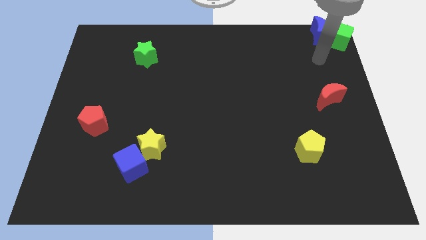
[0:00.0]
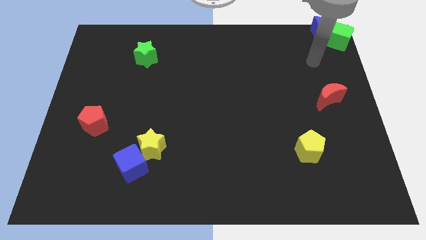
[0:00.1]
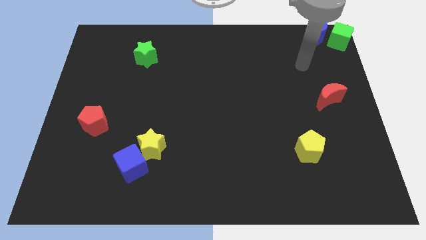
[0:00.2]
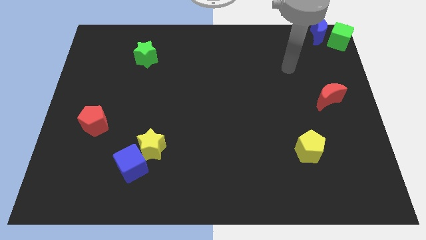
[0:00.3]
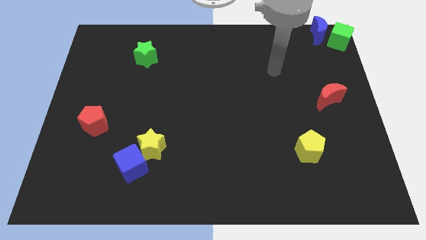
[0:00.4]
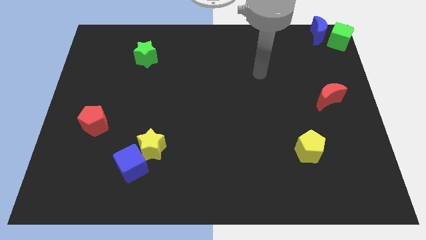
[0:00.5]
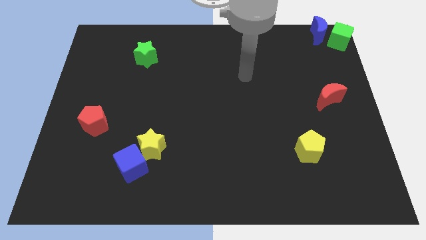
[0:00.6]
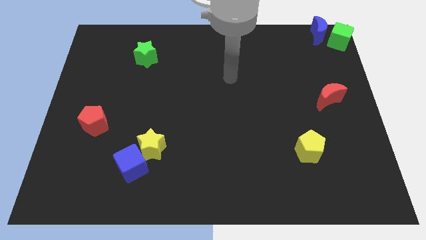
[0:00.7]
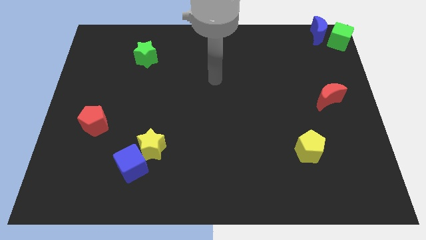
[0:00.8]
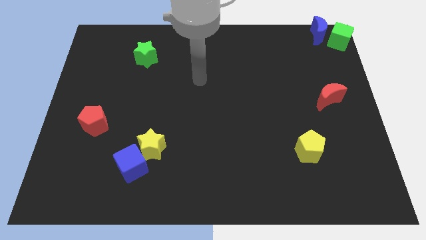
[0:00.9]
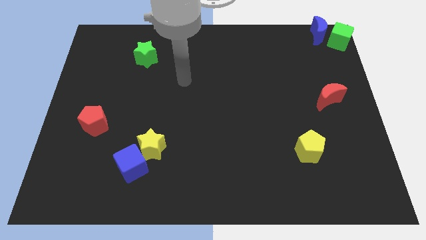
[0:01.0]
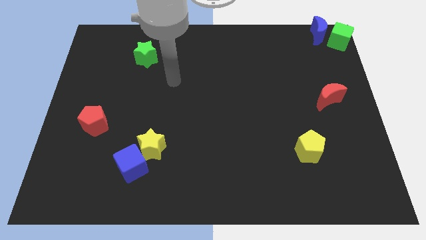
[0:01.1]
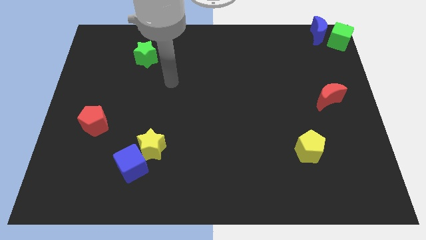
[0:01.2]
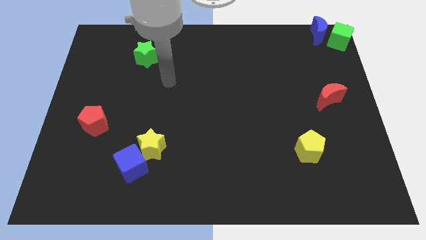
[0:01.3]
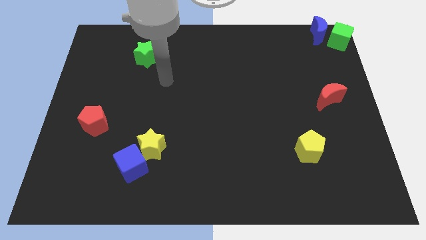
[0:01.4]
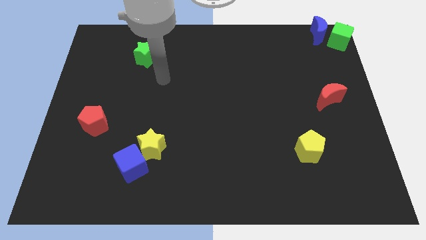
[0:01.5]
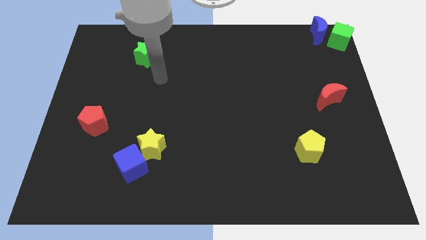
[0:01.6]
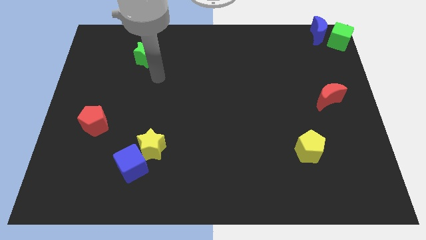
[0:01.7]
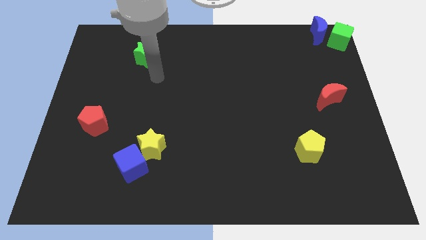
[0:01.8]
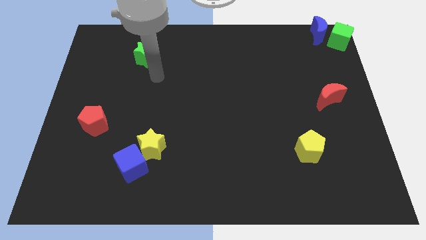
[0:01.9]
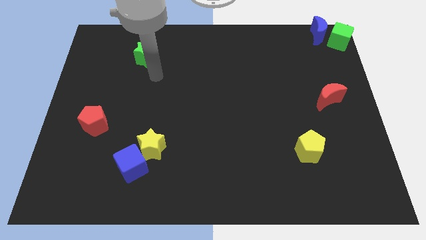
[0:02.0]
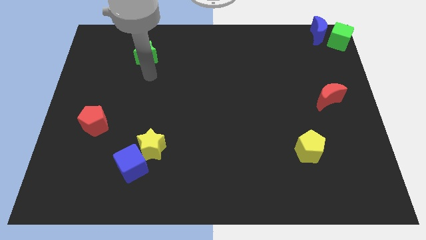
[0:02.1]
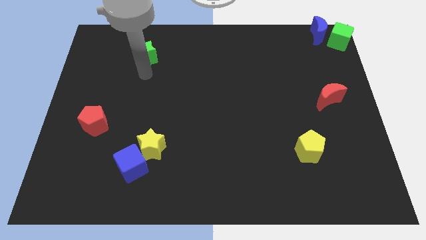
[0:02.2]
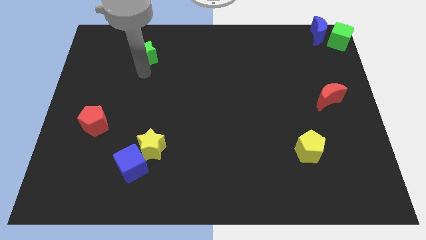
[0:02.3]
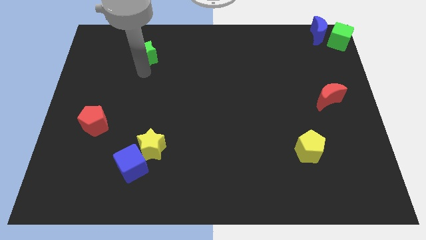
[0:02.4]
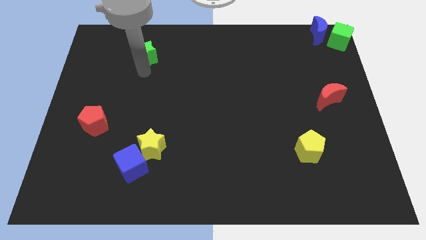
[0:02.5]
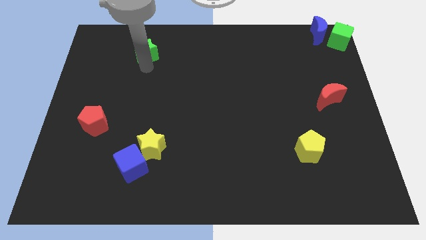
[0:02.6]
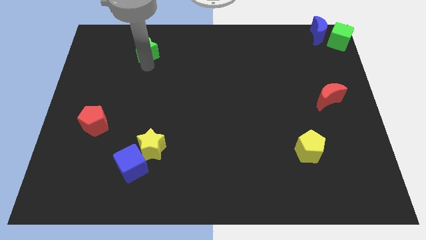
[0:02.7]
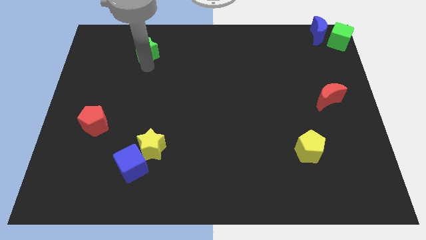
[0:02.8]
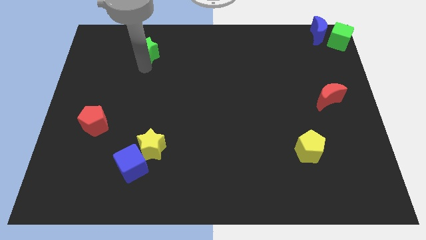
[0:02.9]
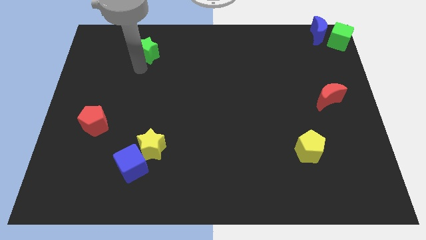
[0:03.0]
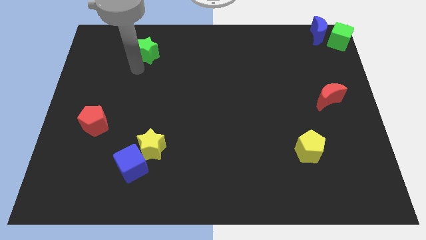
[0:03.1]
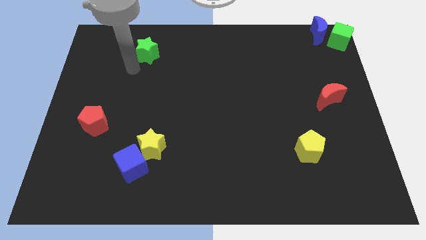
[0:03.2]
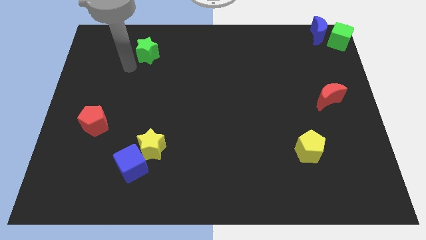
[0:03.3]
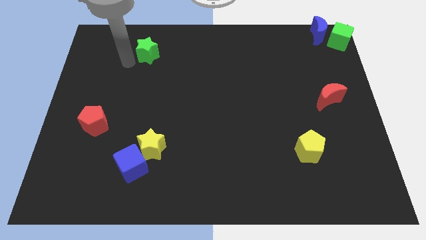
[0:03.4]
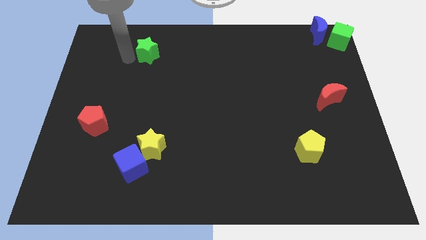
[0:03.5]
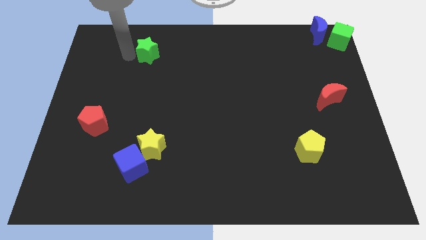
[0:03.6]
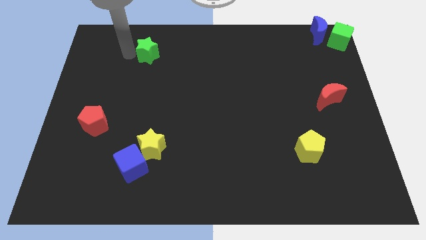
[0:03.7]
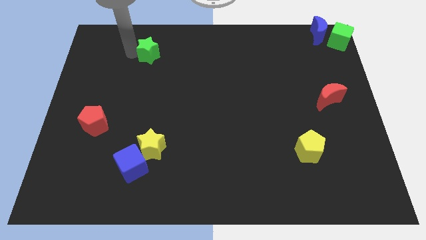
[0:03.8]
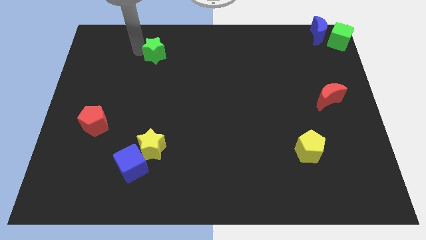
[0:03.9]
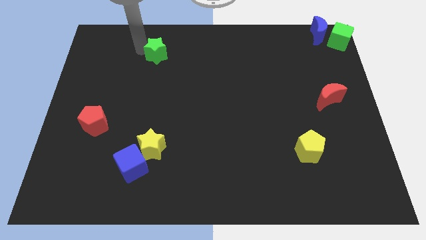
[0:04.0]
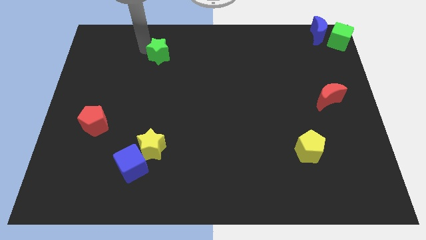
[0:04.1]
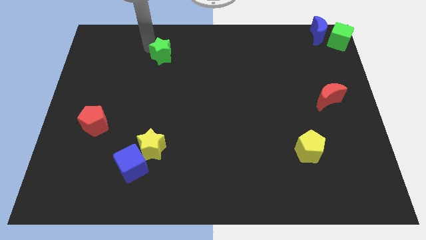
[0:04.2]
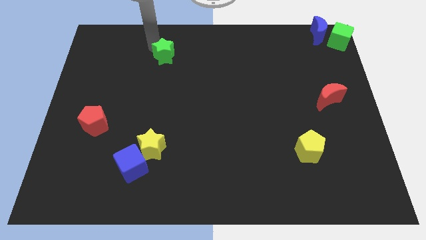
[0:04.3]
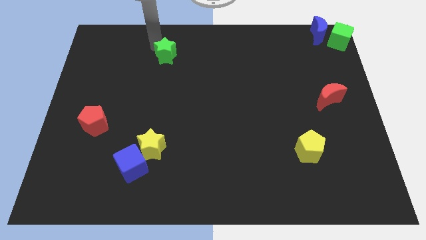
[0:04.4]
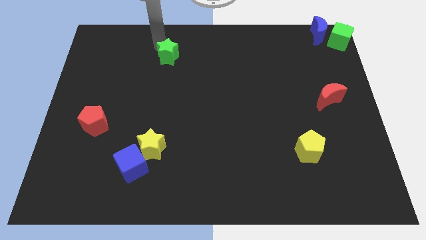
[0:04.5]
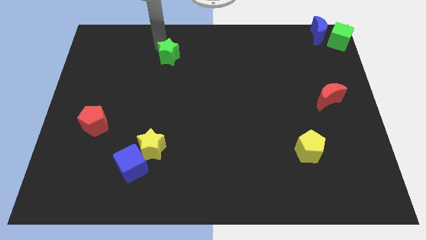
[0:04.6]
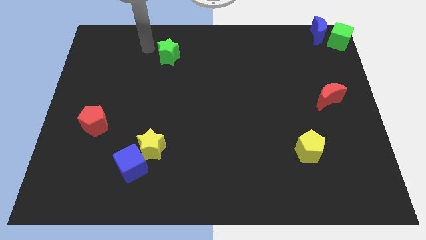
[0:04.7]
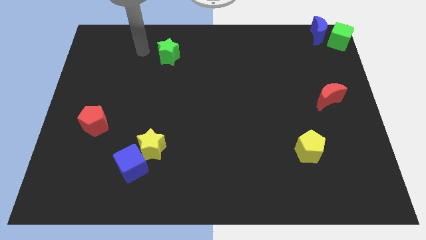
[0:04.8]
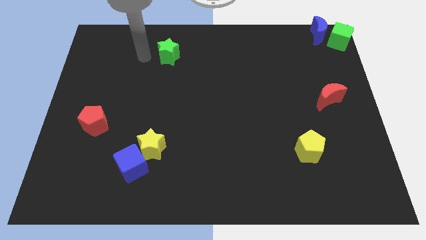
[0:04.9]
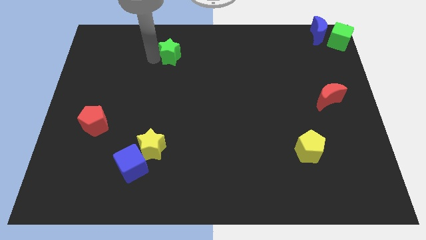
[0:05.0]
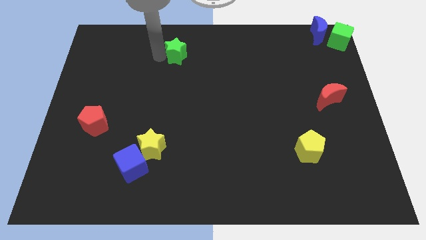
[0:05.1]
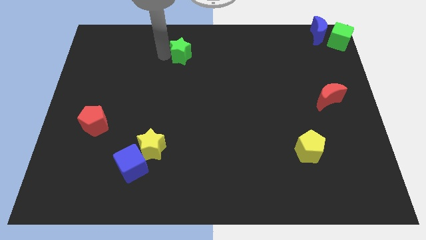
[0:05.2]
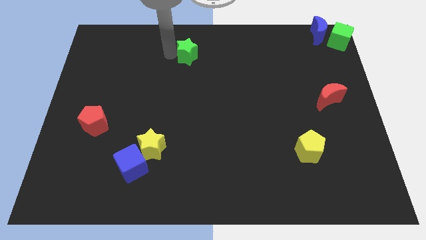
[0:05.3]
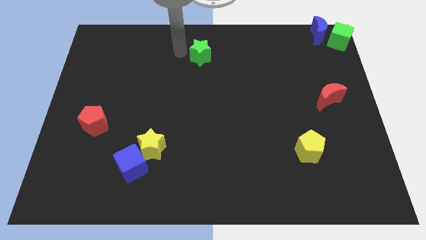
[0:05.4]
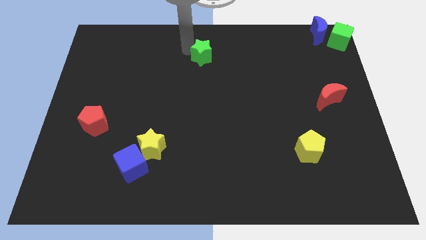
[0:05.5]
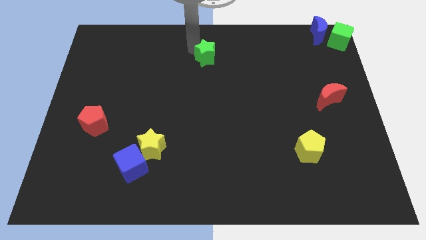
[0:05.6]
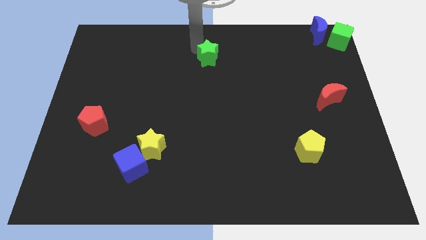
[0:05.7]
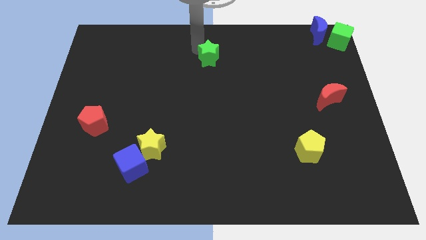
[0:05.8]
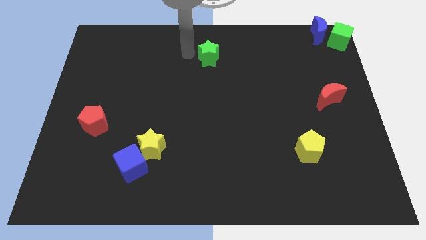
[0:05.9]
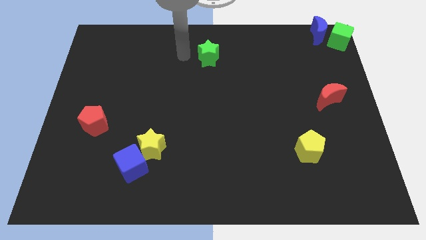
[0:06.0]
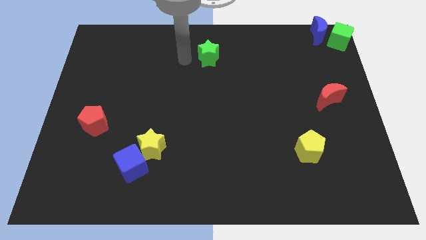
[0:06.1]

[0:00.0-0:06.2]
push green star to the top centre of the board

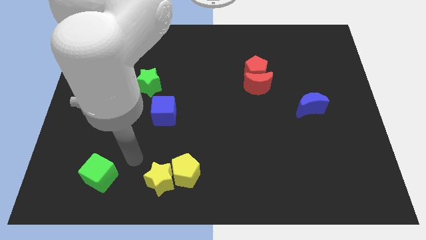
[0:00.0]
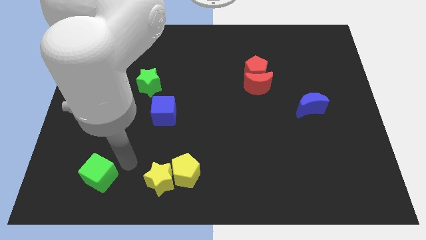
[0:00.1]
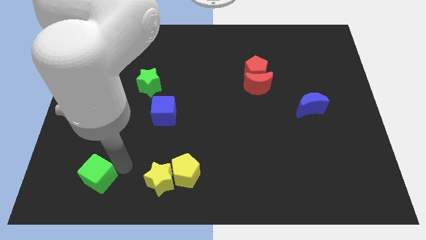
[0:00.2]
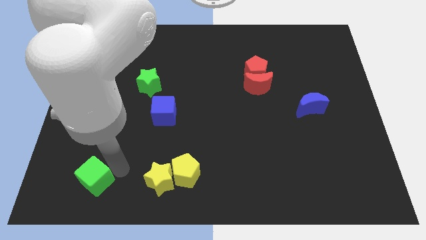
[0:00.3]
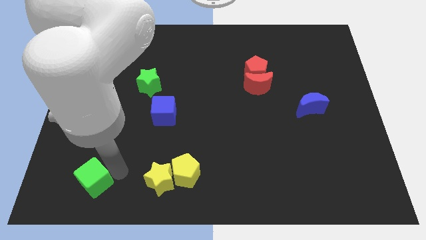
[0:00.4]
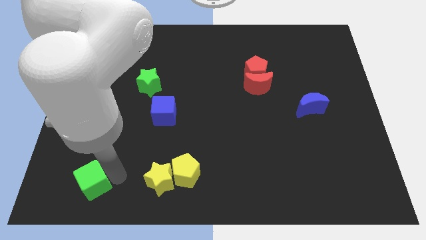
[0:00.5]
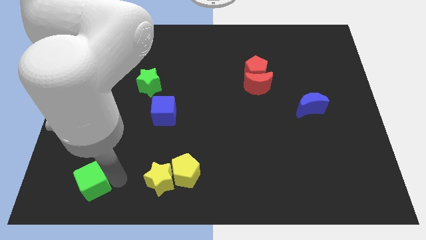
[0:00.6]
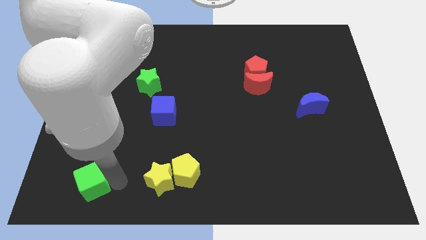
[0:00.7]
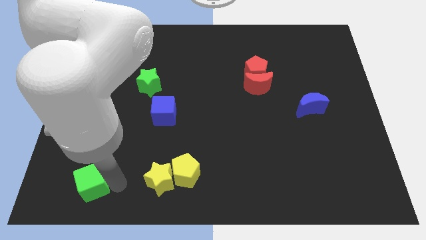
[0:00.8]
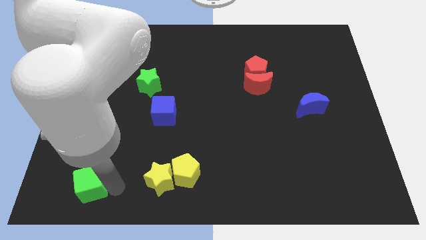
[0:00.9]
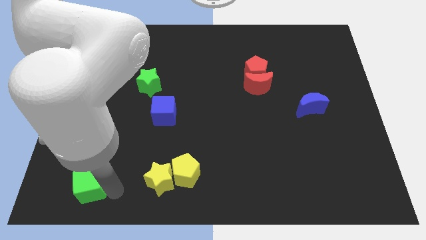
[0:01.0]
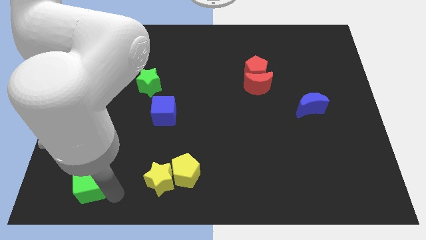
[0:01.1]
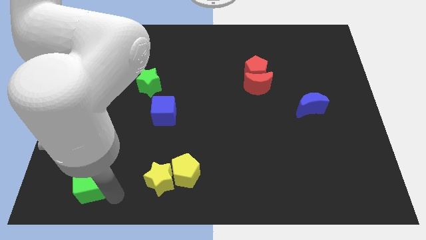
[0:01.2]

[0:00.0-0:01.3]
slide the green cube towards bottom

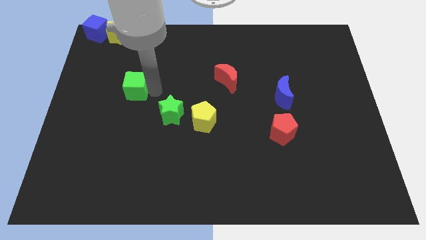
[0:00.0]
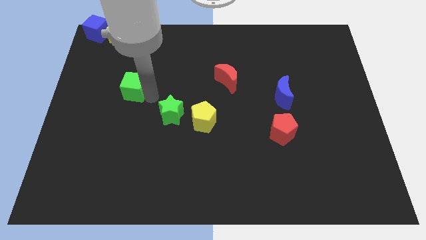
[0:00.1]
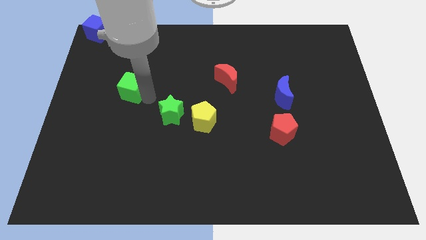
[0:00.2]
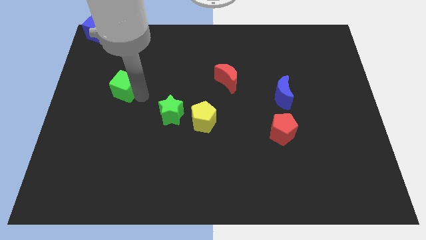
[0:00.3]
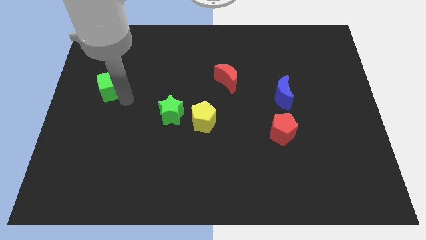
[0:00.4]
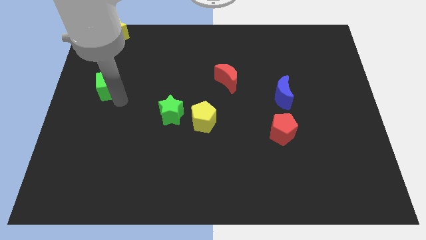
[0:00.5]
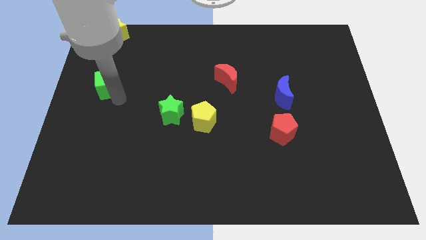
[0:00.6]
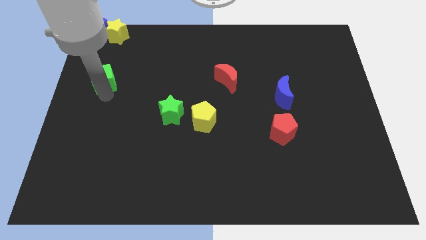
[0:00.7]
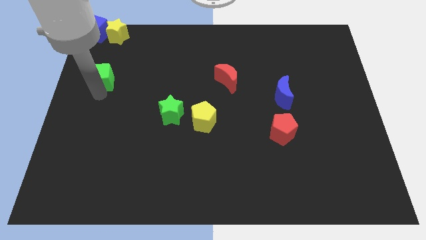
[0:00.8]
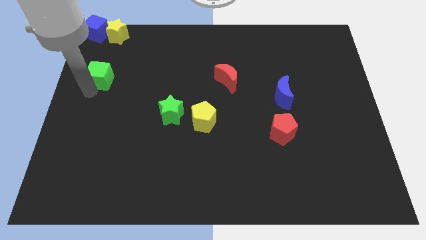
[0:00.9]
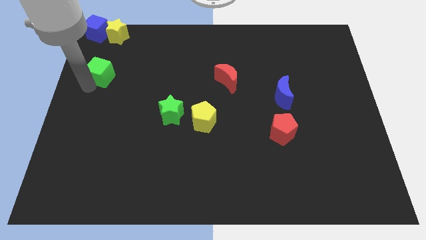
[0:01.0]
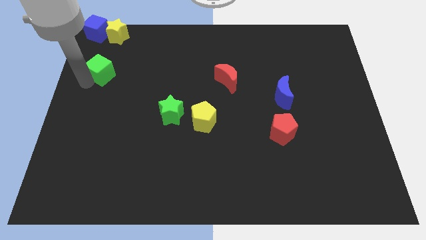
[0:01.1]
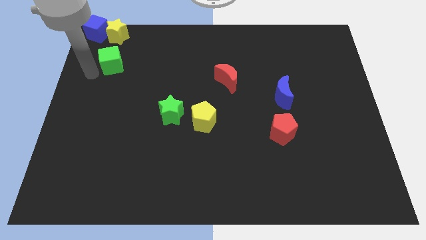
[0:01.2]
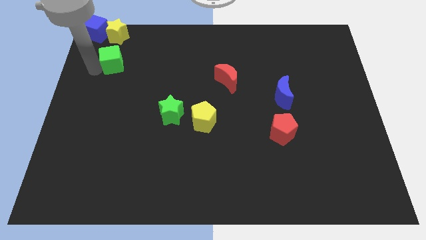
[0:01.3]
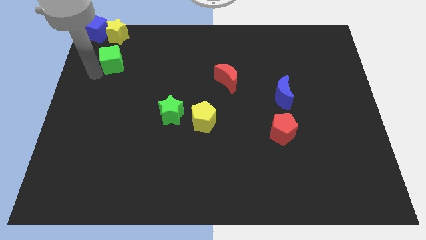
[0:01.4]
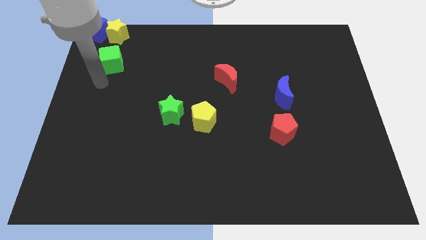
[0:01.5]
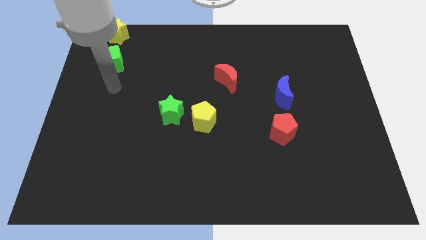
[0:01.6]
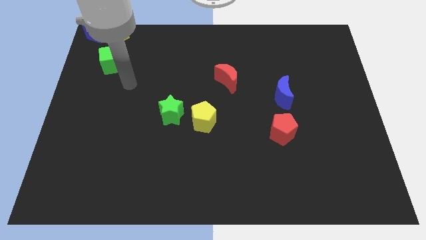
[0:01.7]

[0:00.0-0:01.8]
push the green cube below the blue cube and the yellow star
